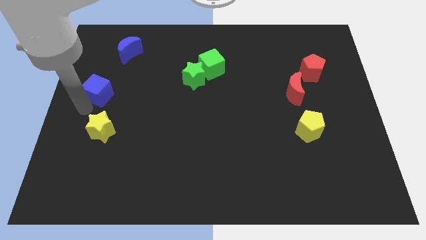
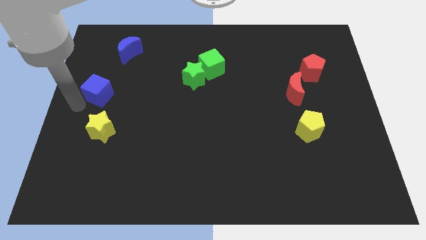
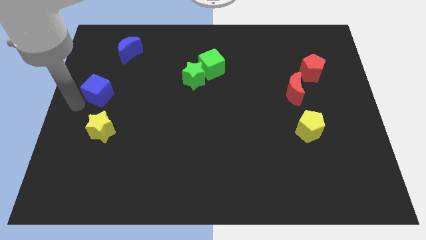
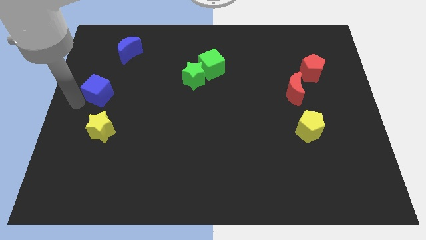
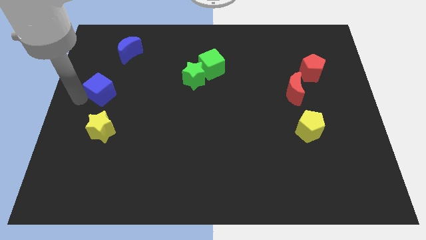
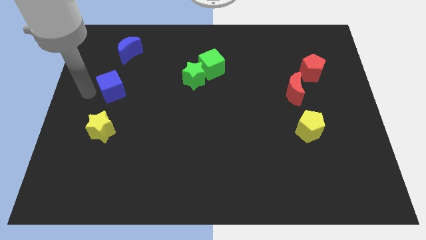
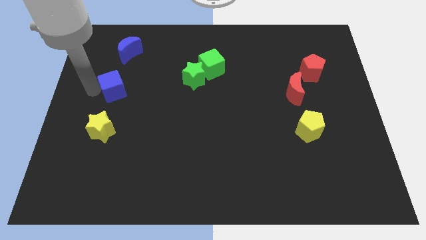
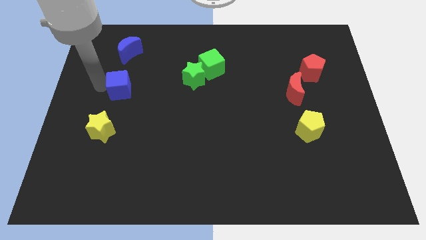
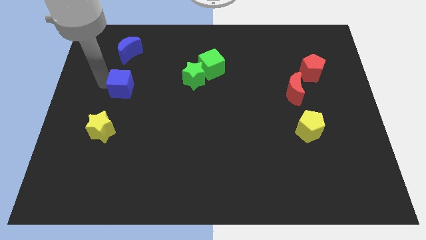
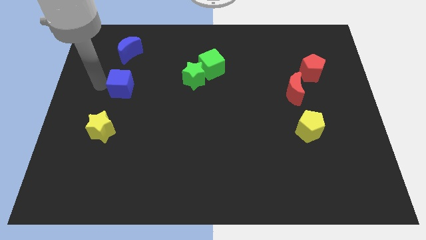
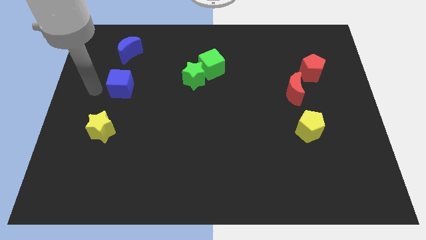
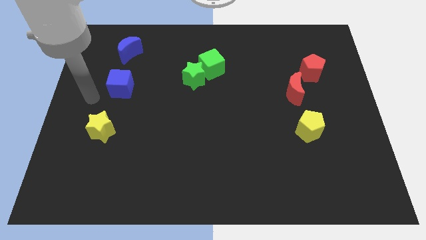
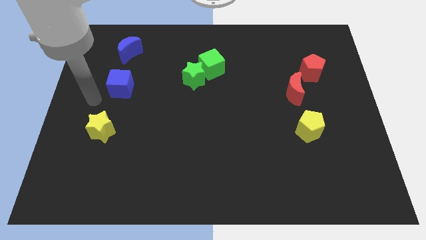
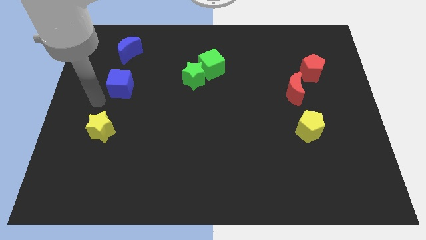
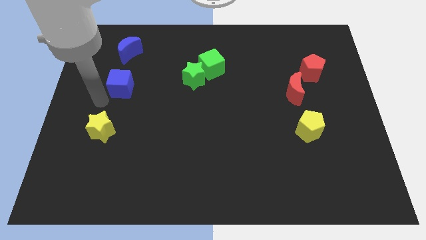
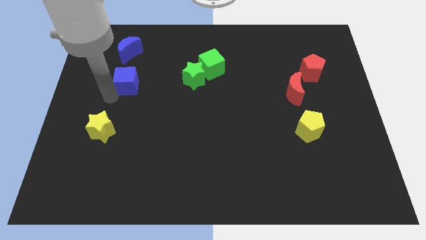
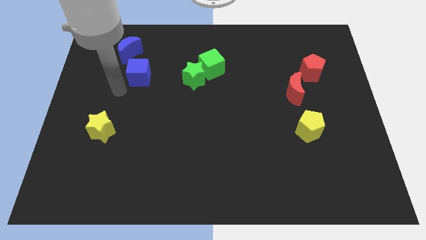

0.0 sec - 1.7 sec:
move the blue cube to the bottom of the blue crescent

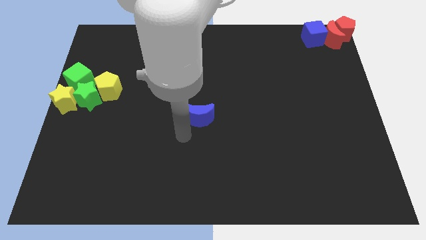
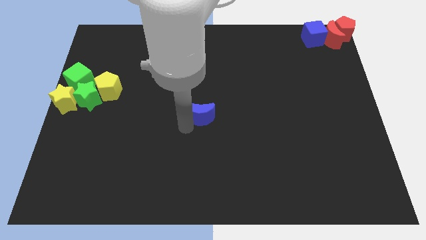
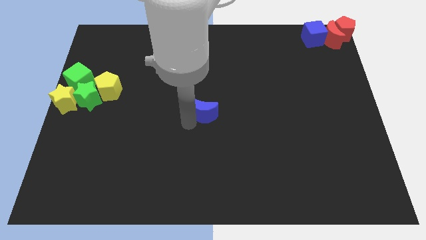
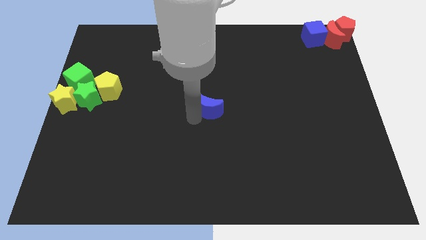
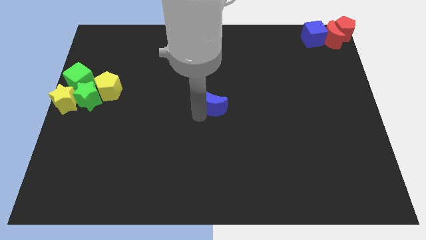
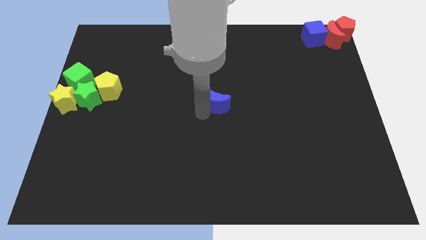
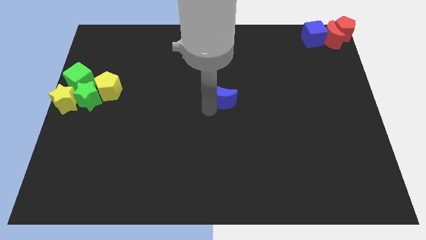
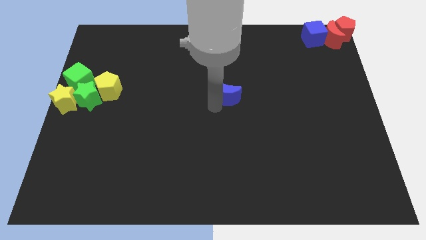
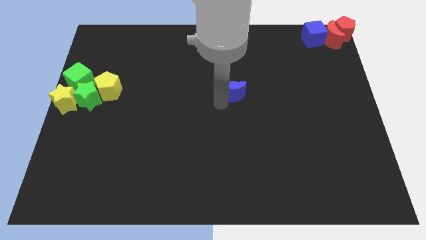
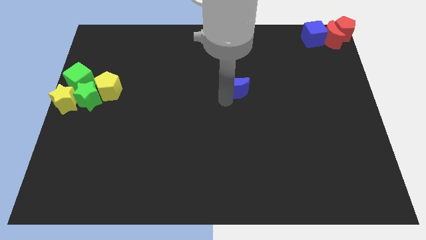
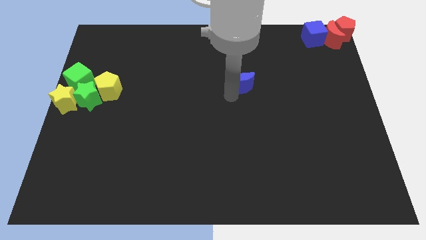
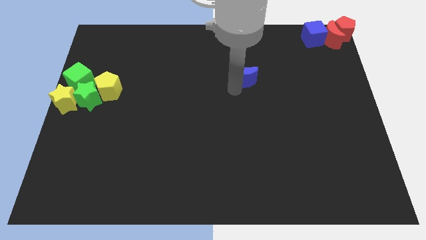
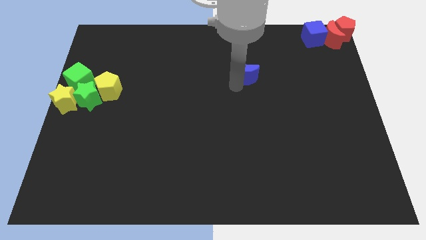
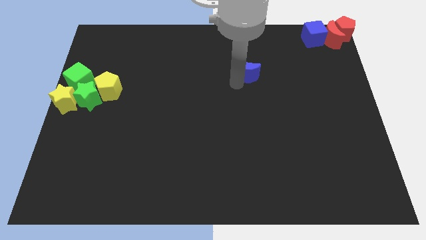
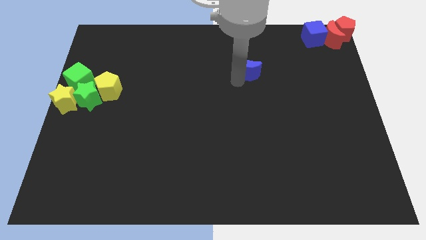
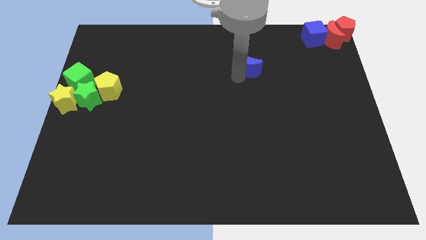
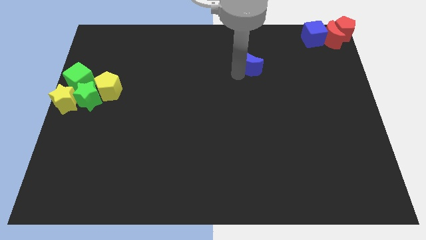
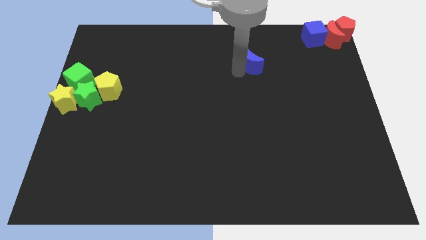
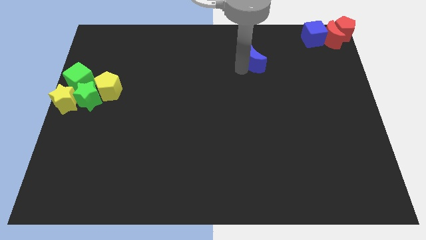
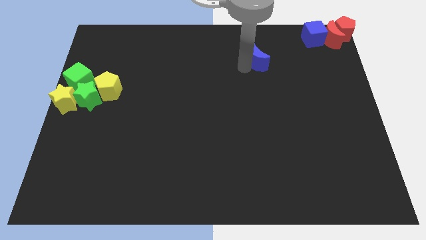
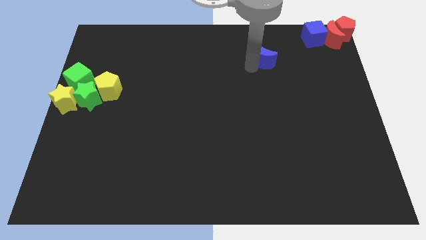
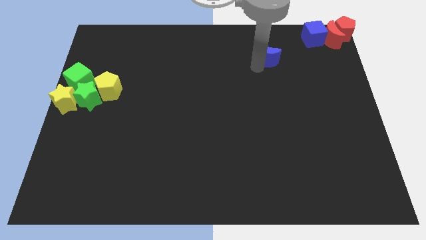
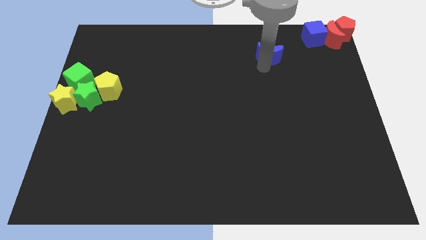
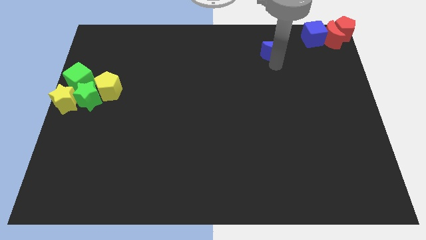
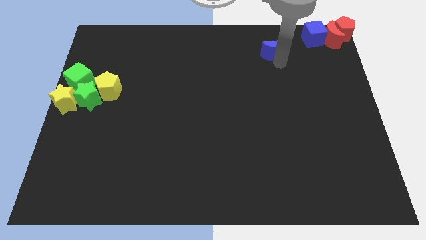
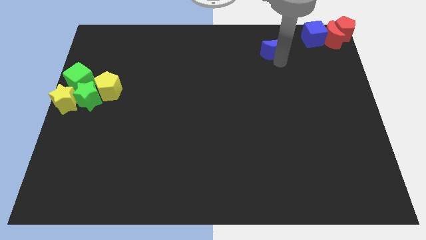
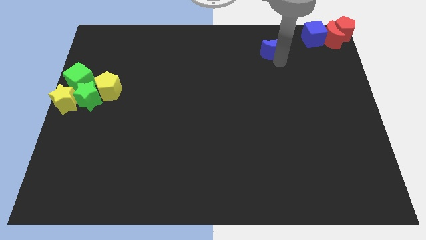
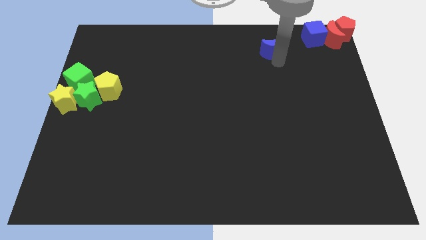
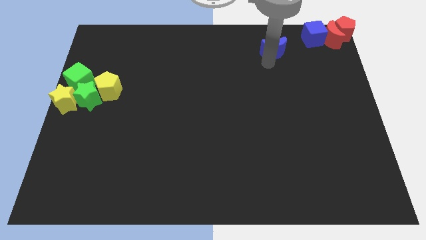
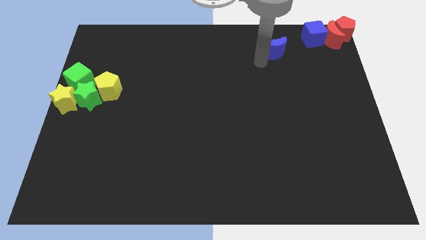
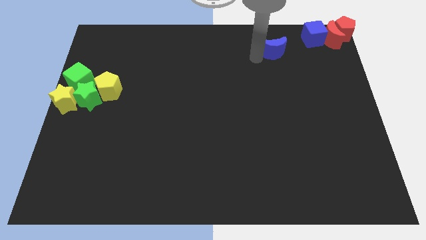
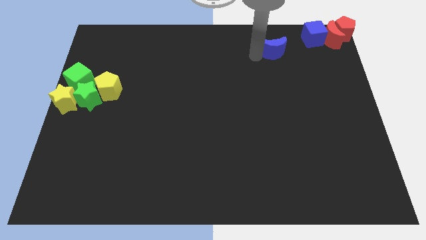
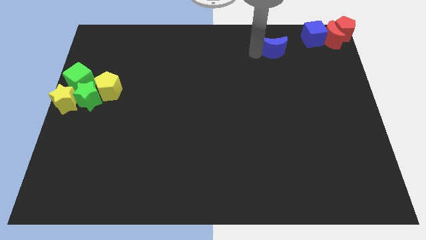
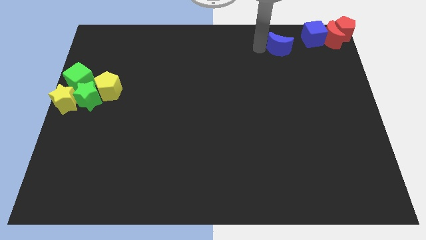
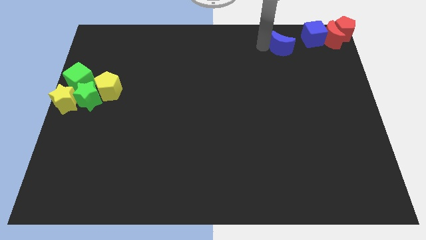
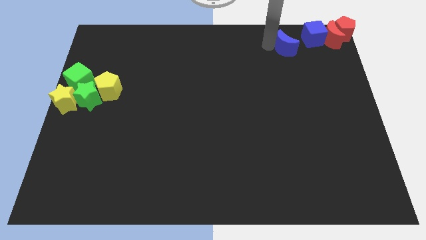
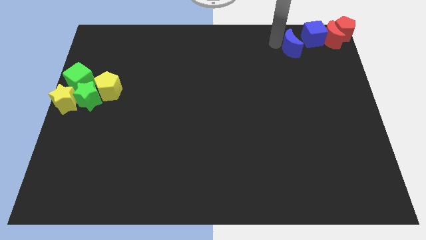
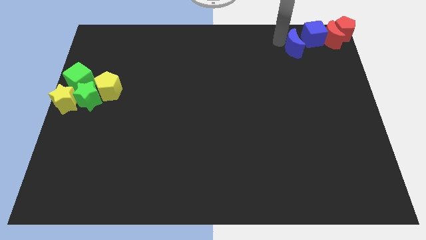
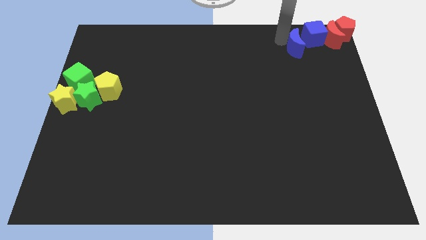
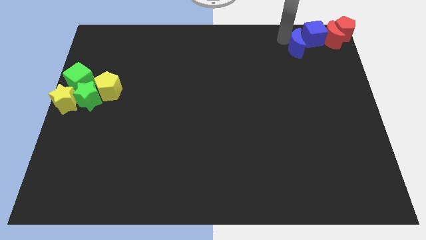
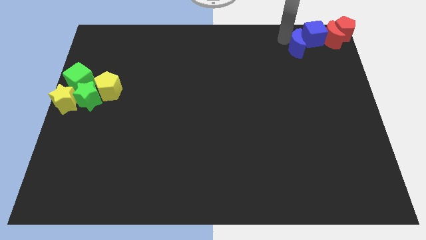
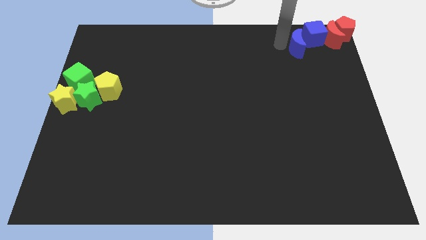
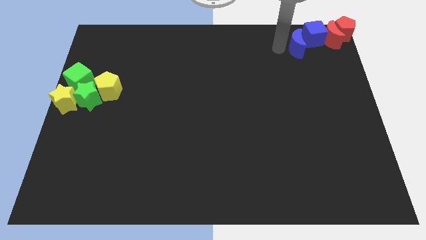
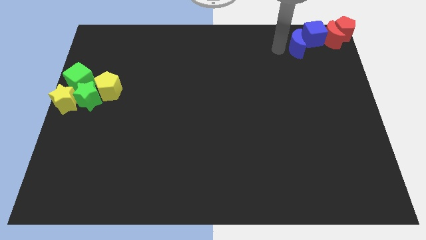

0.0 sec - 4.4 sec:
move the blue moon near to the blocks

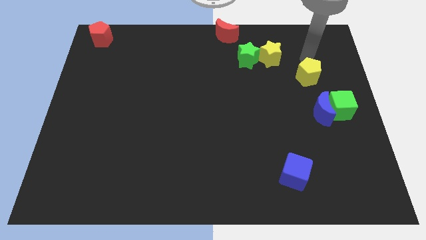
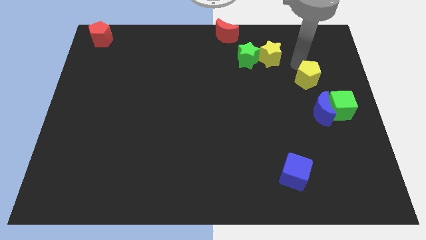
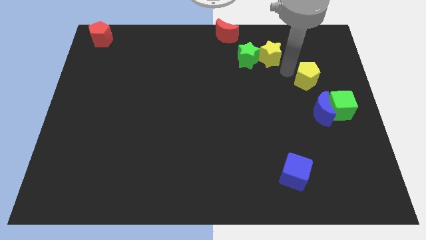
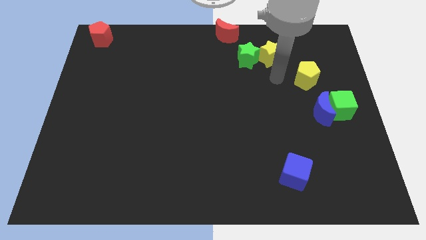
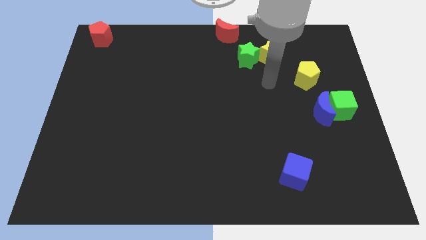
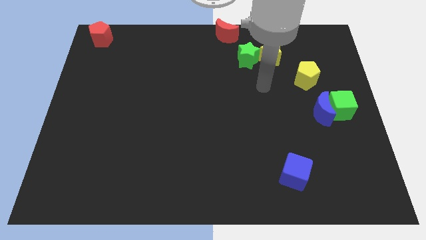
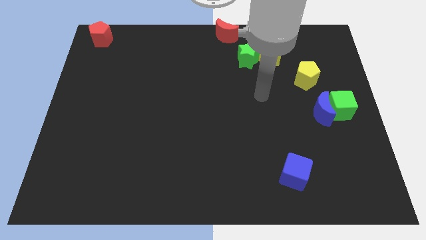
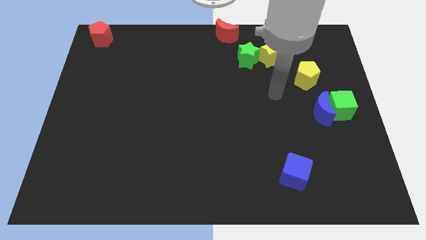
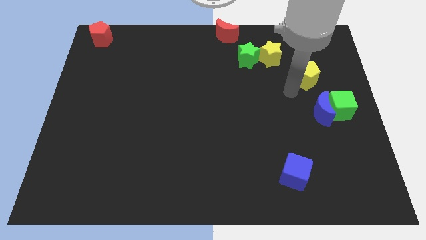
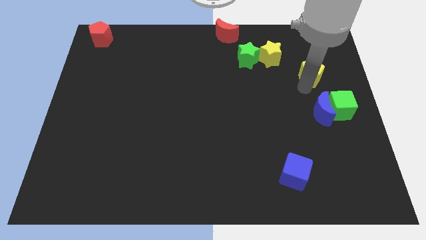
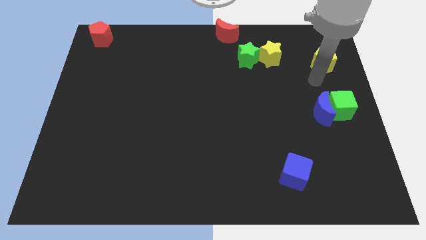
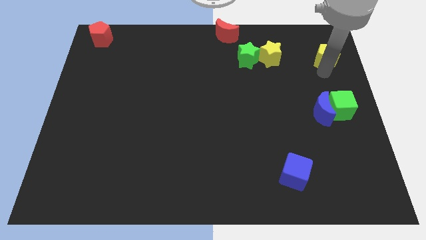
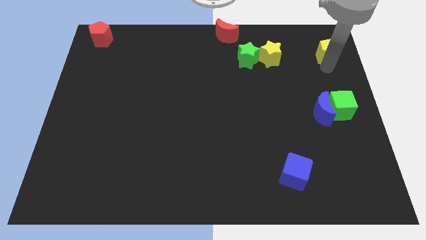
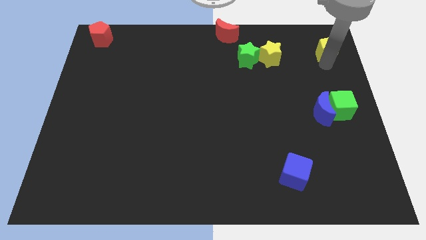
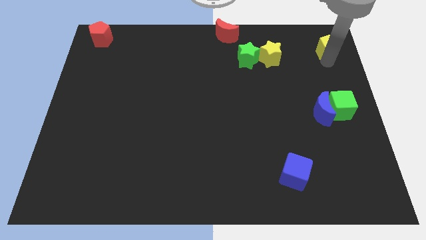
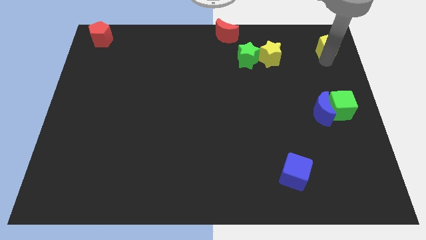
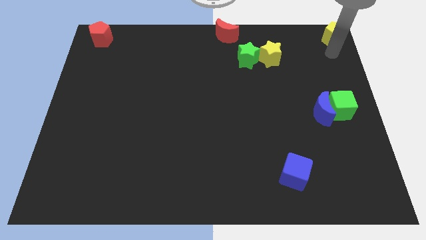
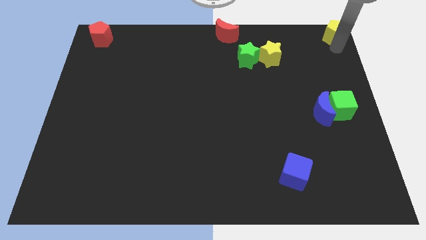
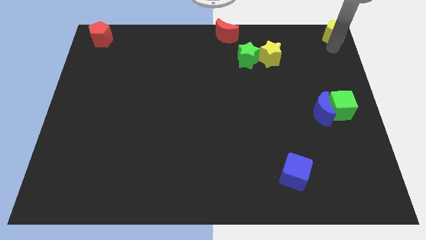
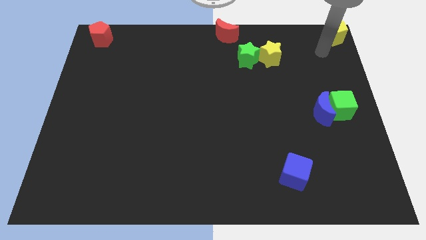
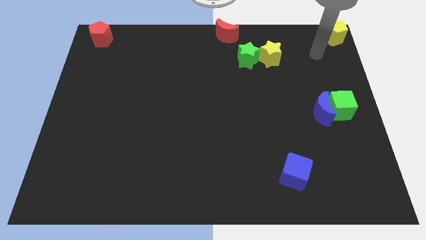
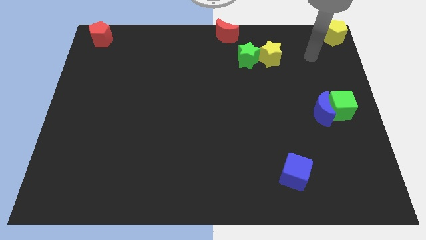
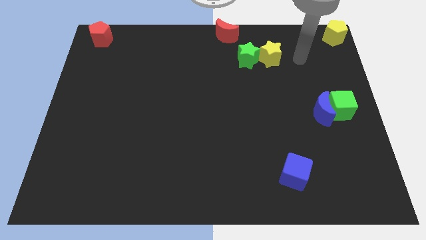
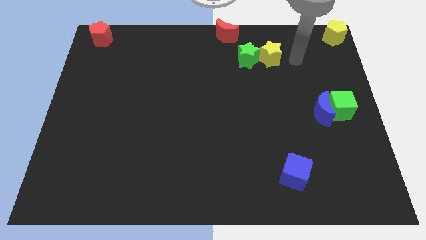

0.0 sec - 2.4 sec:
place the yellow pentagon to the top right corner of the board

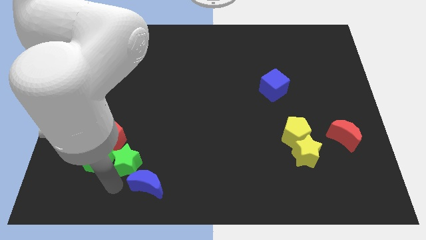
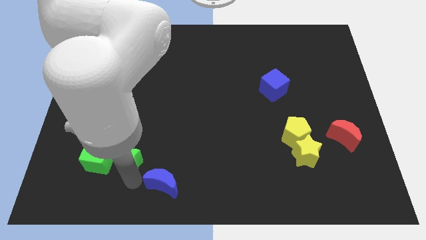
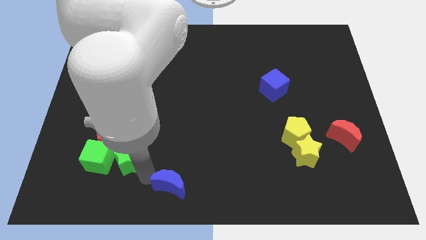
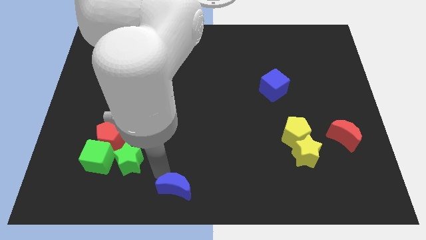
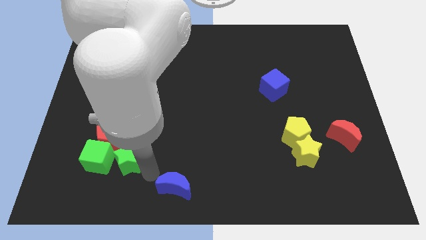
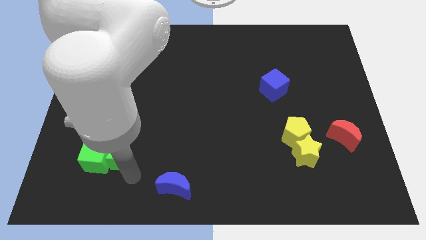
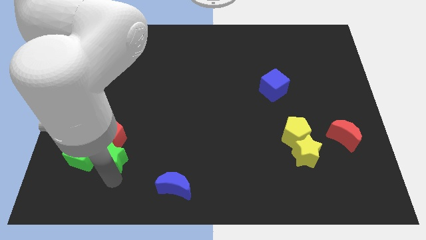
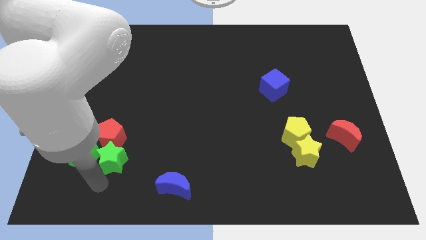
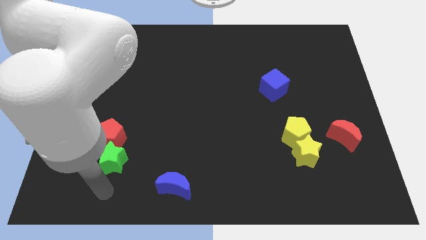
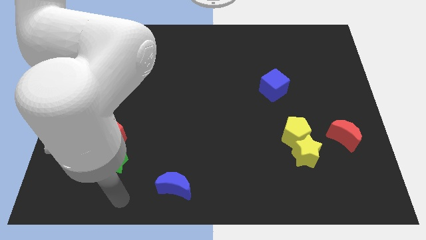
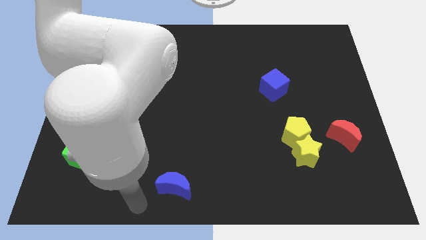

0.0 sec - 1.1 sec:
place arm below green star
